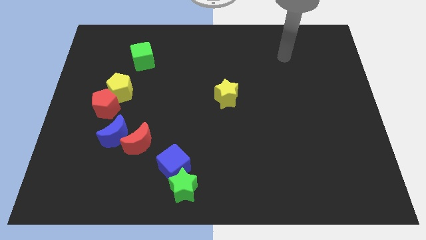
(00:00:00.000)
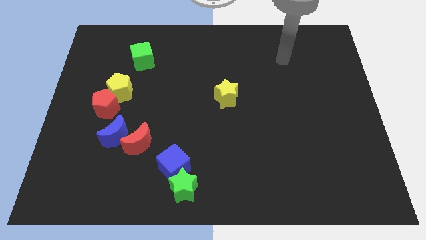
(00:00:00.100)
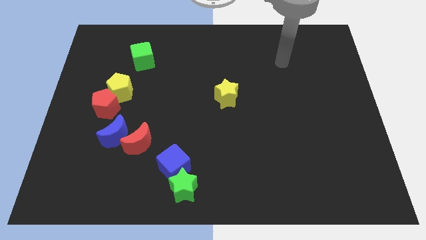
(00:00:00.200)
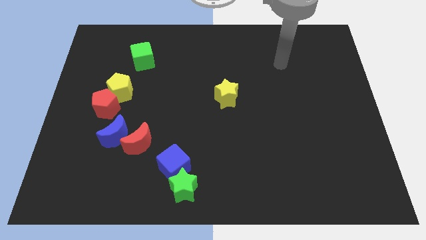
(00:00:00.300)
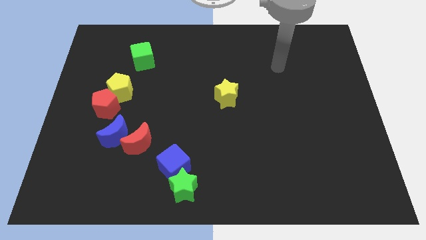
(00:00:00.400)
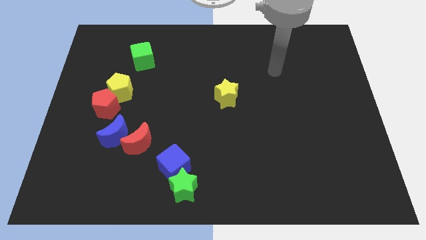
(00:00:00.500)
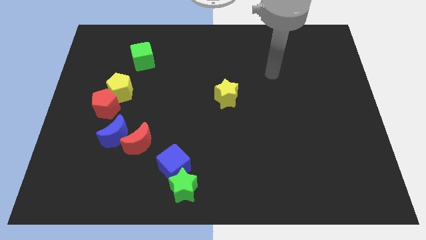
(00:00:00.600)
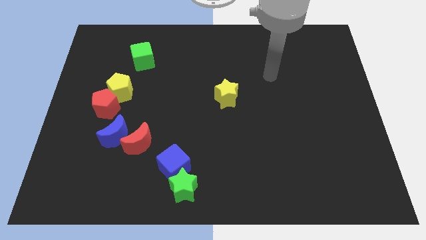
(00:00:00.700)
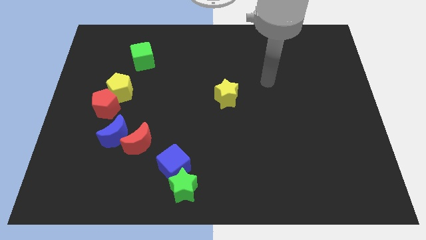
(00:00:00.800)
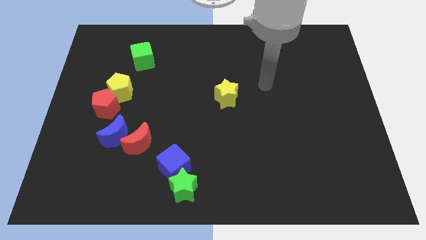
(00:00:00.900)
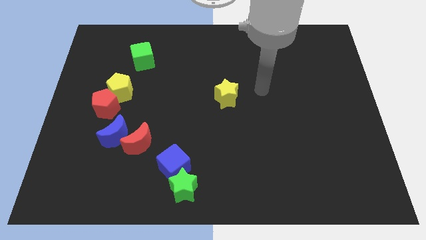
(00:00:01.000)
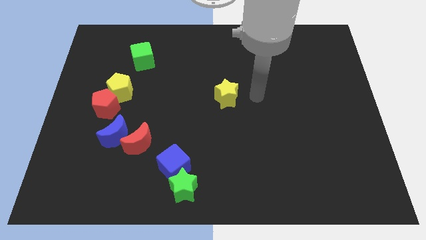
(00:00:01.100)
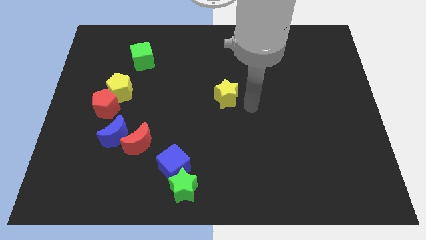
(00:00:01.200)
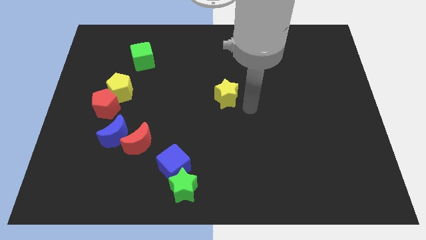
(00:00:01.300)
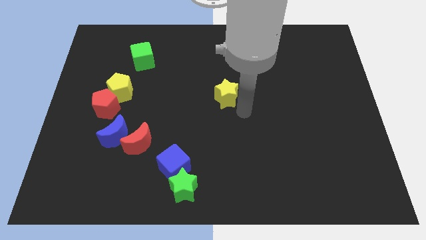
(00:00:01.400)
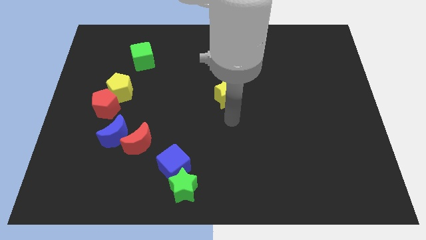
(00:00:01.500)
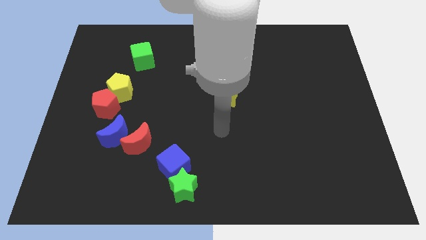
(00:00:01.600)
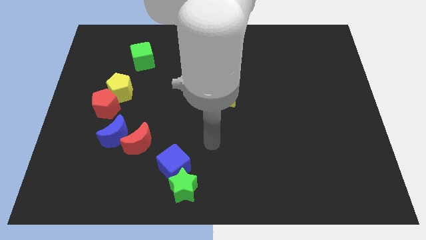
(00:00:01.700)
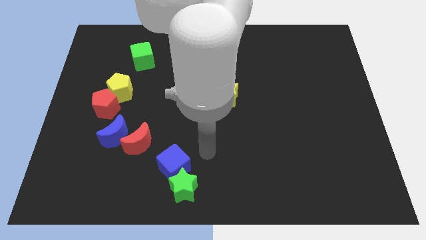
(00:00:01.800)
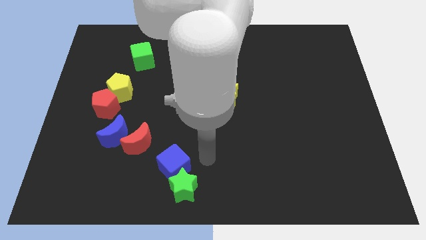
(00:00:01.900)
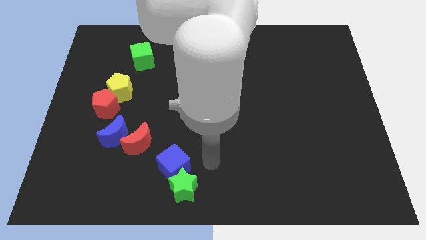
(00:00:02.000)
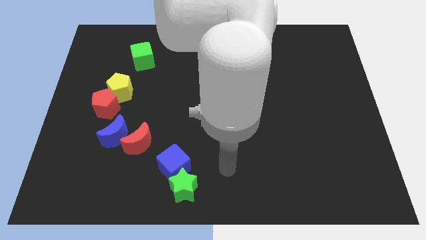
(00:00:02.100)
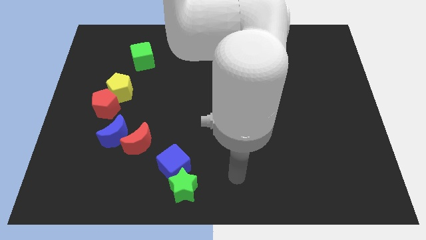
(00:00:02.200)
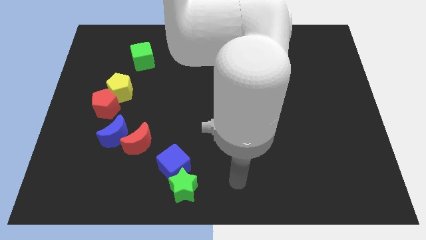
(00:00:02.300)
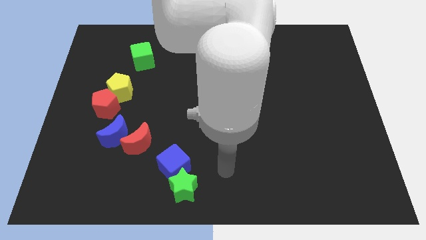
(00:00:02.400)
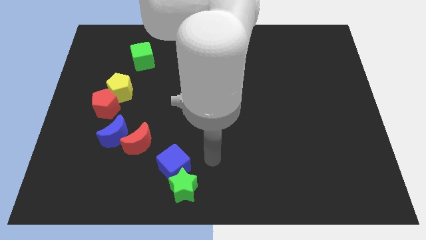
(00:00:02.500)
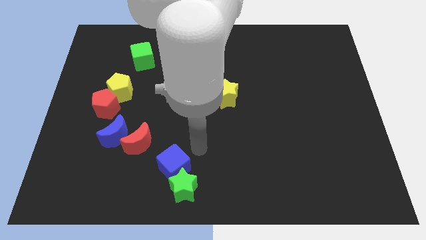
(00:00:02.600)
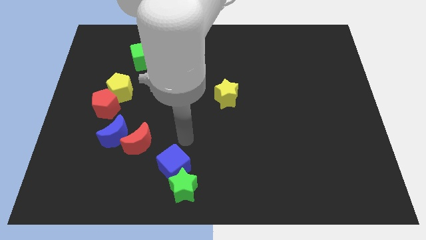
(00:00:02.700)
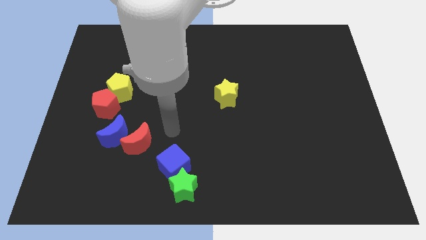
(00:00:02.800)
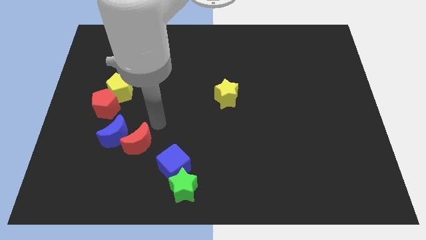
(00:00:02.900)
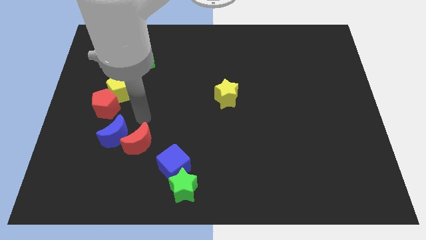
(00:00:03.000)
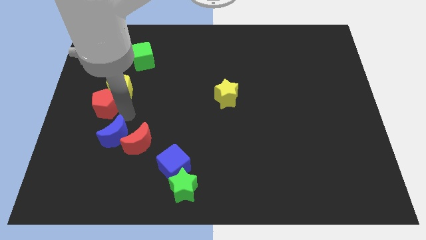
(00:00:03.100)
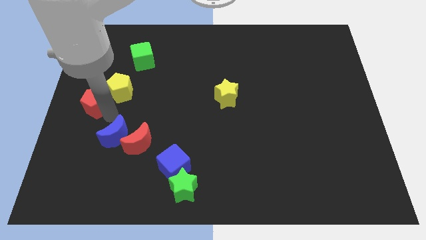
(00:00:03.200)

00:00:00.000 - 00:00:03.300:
move the arm towards the red pentagon

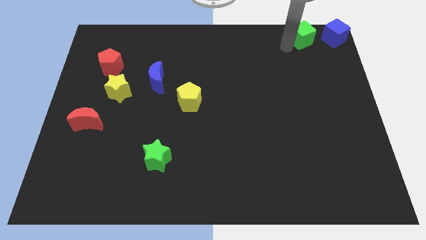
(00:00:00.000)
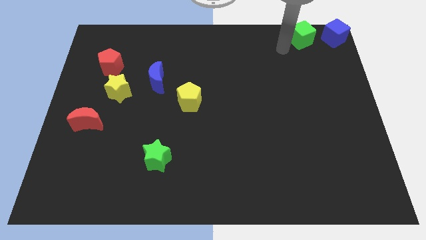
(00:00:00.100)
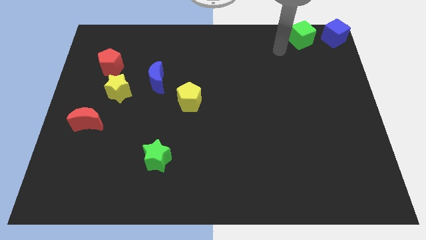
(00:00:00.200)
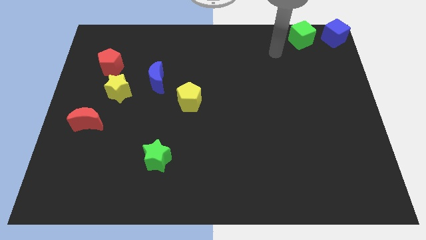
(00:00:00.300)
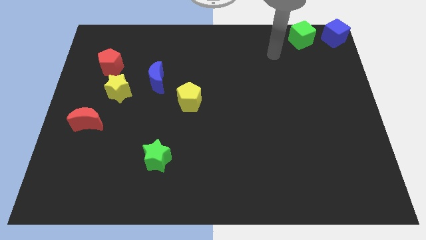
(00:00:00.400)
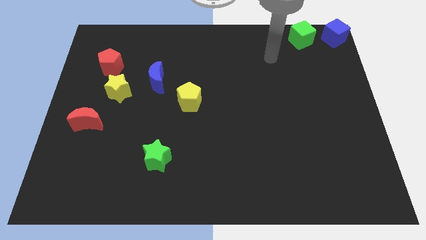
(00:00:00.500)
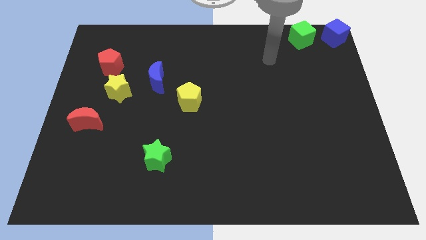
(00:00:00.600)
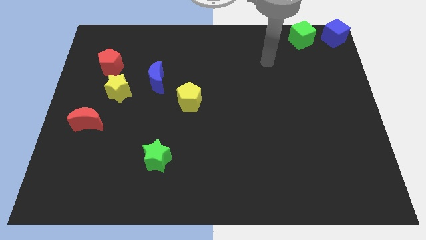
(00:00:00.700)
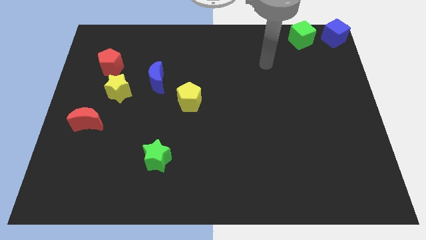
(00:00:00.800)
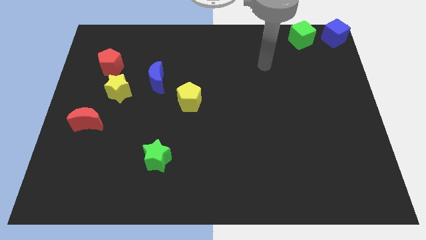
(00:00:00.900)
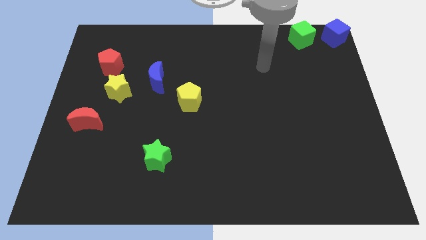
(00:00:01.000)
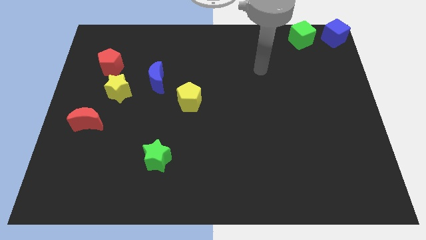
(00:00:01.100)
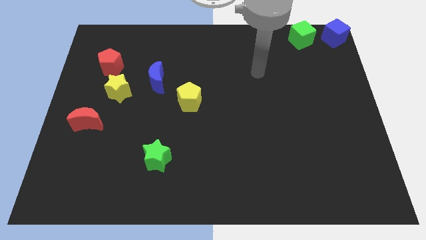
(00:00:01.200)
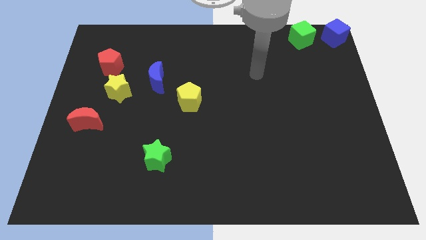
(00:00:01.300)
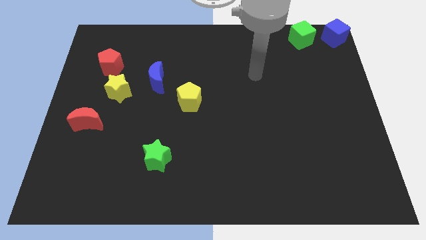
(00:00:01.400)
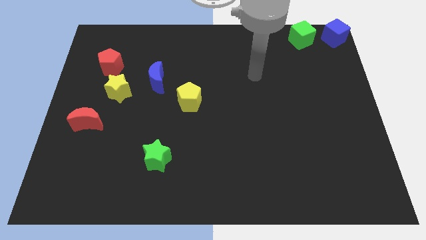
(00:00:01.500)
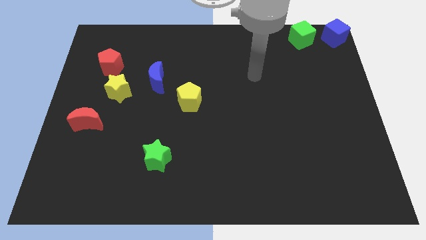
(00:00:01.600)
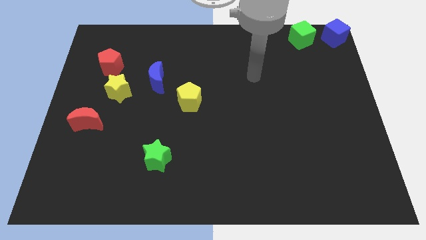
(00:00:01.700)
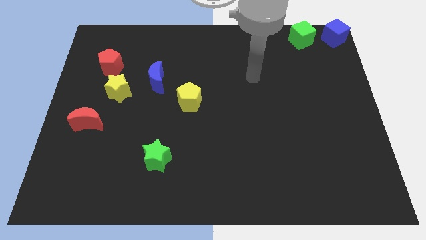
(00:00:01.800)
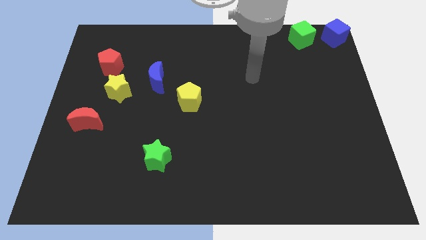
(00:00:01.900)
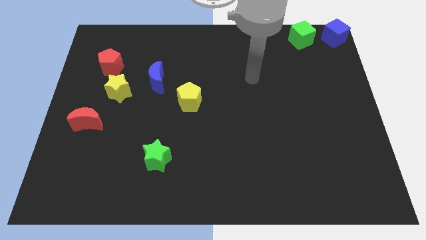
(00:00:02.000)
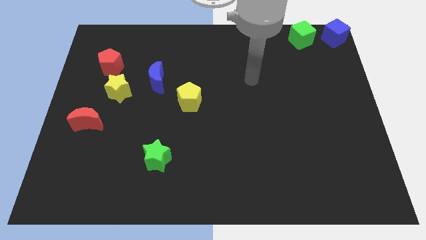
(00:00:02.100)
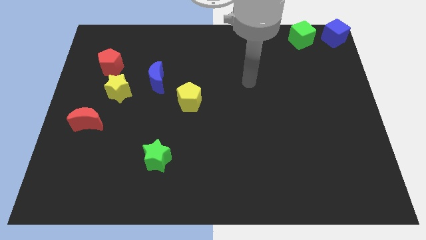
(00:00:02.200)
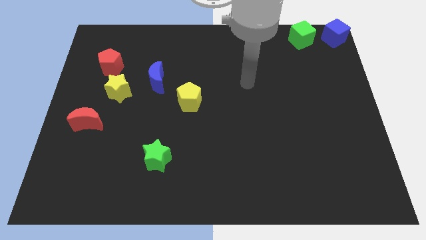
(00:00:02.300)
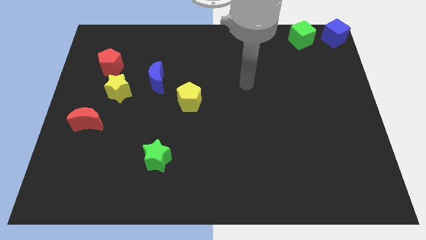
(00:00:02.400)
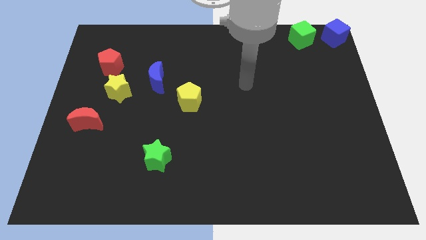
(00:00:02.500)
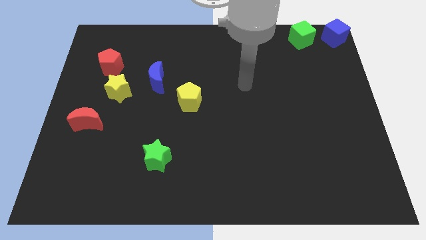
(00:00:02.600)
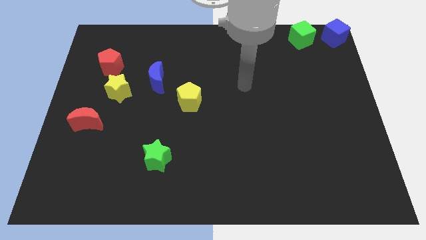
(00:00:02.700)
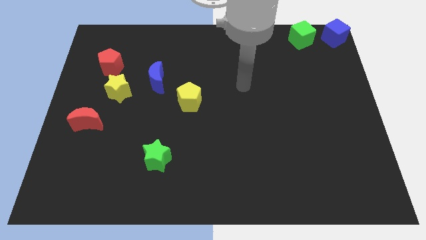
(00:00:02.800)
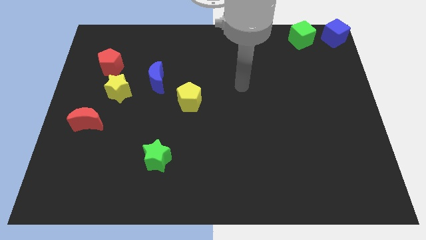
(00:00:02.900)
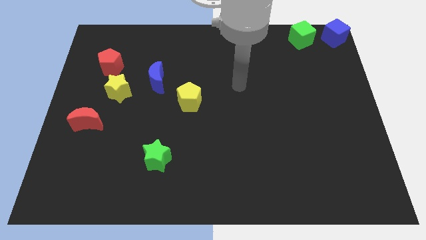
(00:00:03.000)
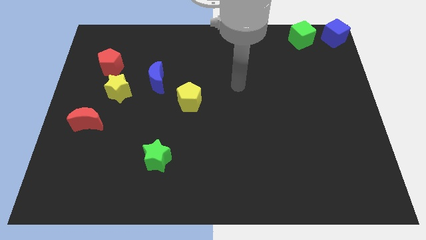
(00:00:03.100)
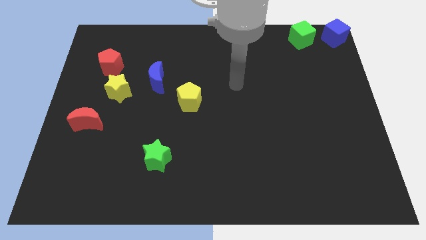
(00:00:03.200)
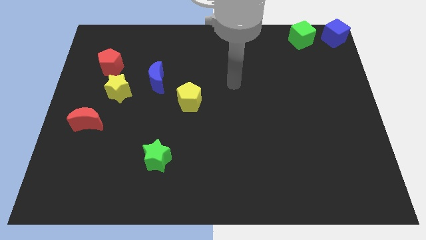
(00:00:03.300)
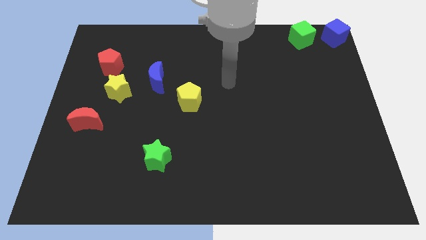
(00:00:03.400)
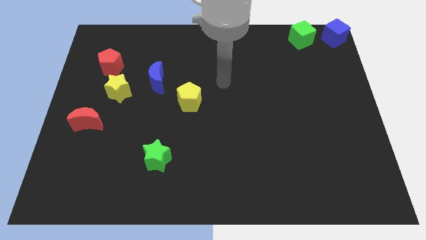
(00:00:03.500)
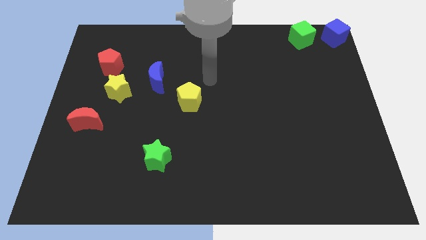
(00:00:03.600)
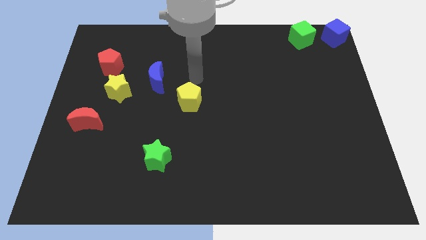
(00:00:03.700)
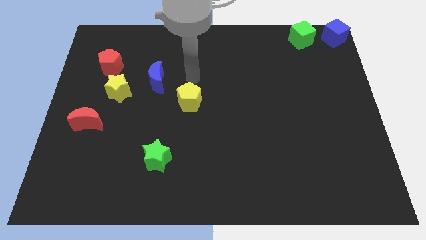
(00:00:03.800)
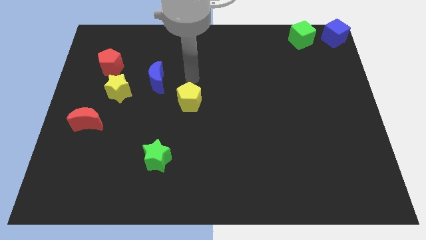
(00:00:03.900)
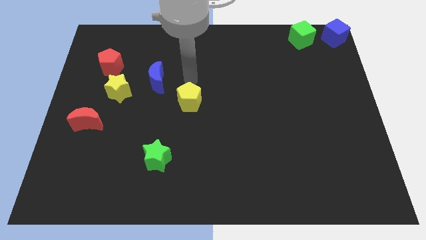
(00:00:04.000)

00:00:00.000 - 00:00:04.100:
place your hand above the yellow pentagon

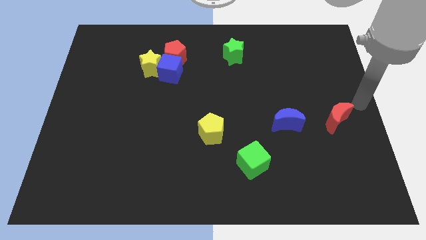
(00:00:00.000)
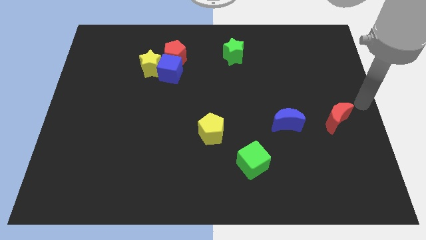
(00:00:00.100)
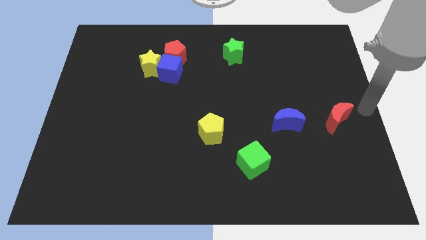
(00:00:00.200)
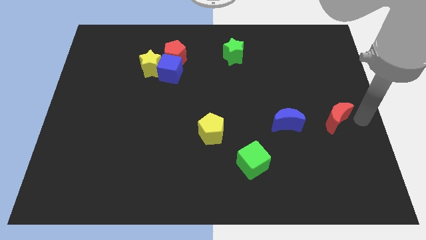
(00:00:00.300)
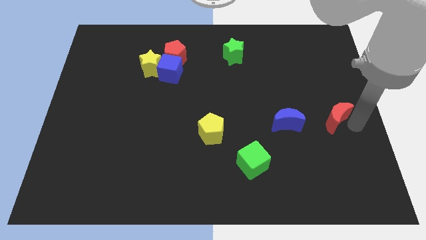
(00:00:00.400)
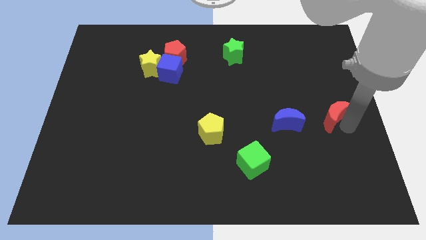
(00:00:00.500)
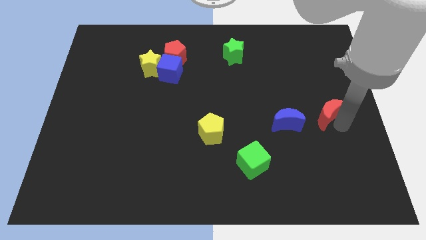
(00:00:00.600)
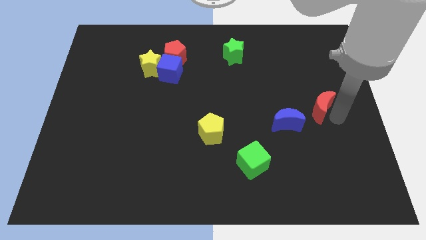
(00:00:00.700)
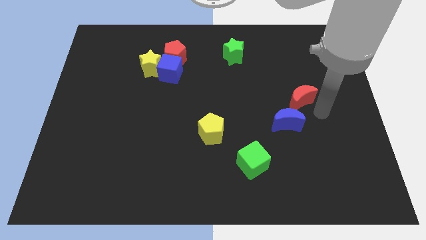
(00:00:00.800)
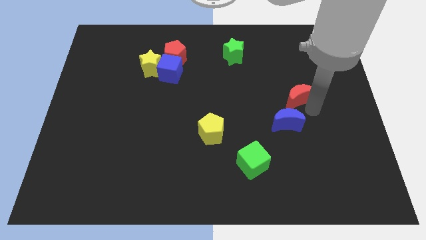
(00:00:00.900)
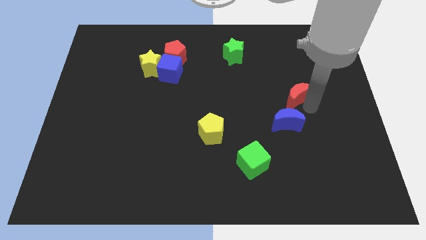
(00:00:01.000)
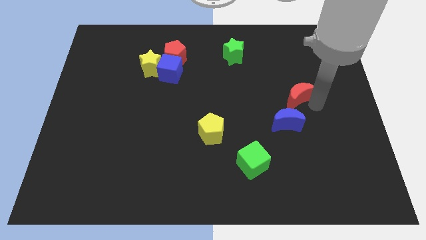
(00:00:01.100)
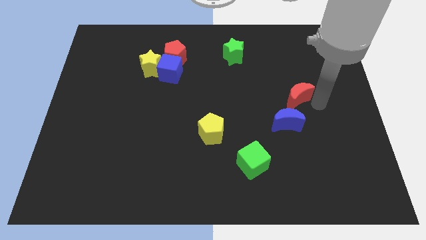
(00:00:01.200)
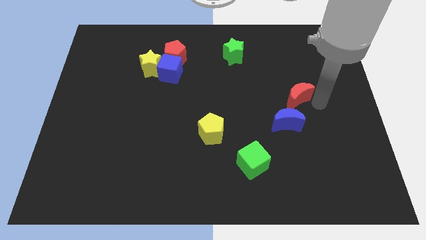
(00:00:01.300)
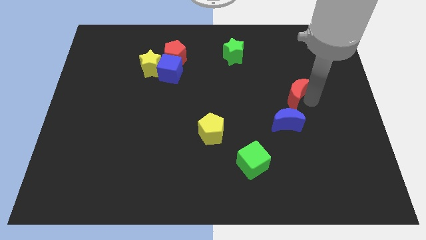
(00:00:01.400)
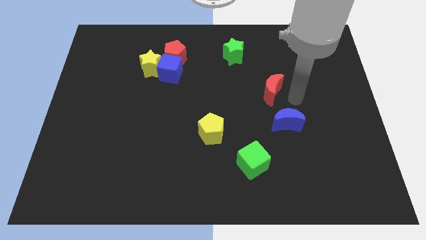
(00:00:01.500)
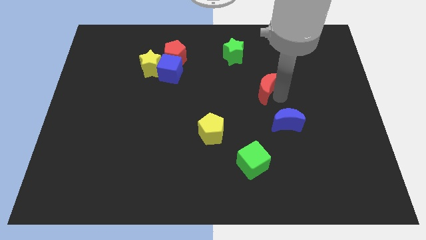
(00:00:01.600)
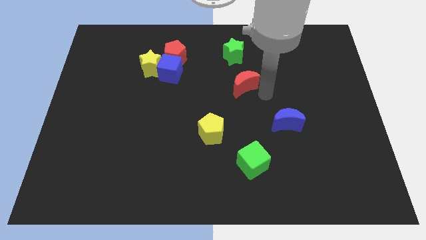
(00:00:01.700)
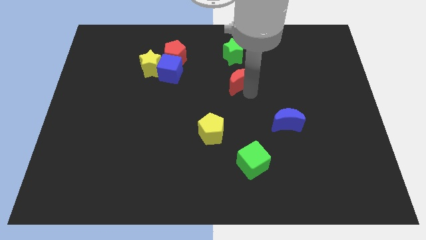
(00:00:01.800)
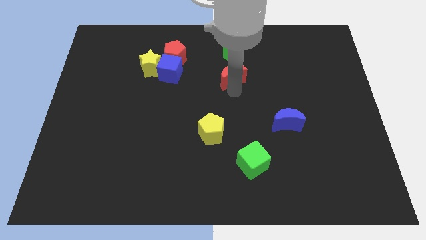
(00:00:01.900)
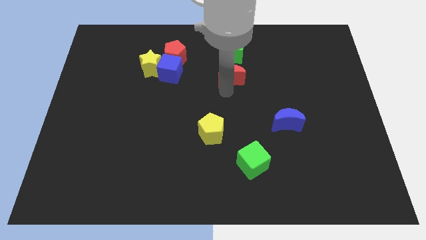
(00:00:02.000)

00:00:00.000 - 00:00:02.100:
move the red crescent below the green star
